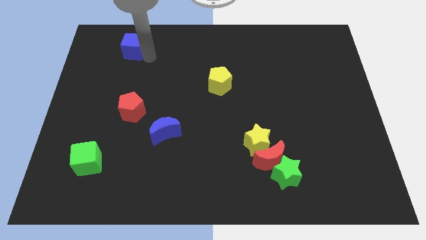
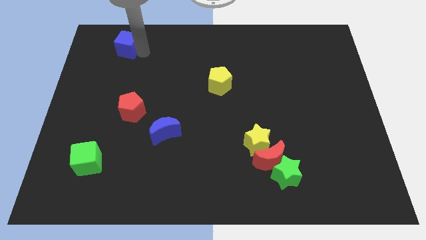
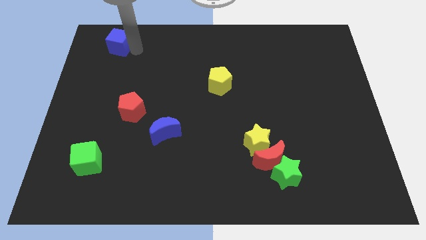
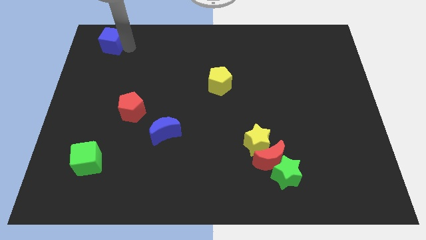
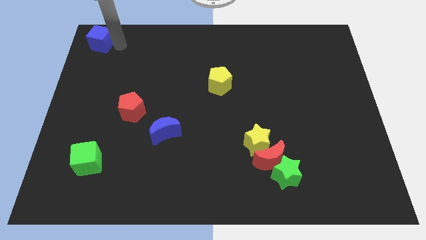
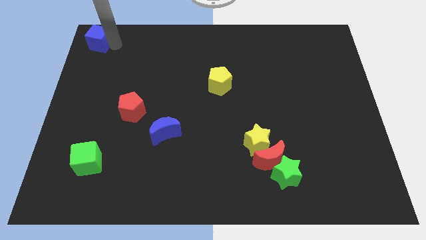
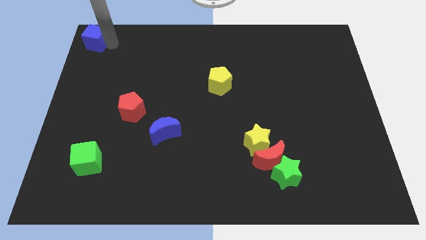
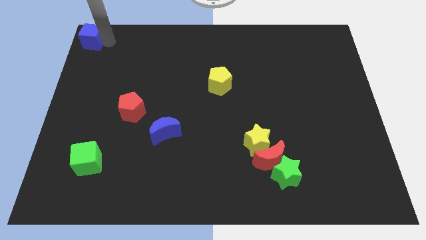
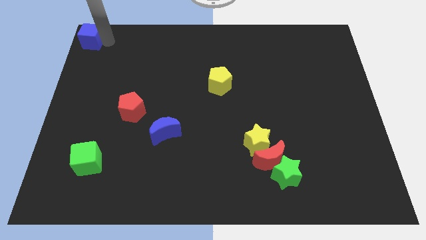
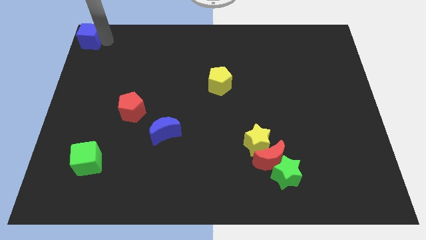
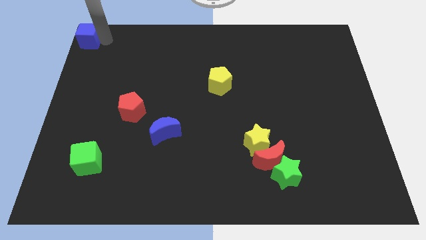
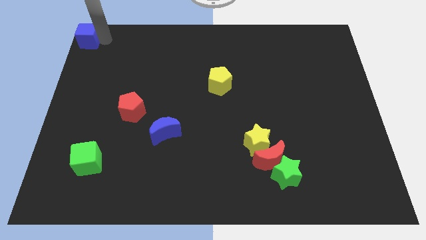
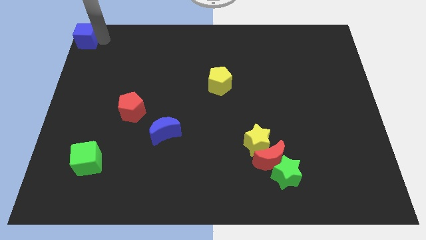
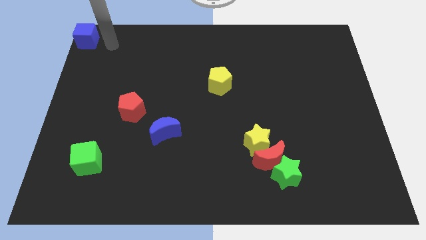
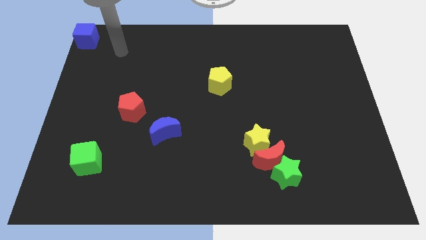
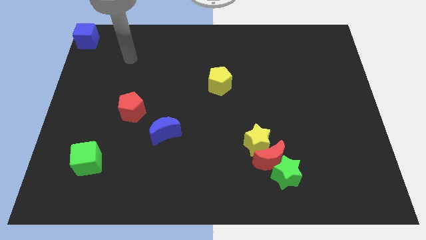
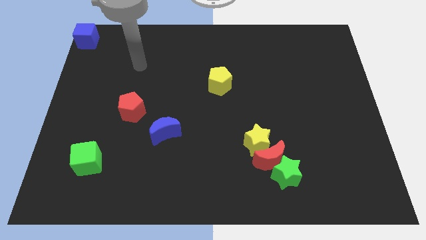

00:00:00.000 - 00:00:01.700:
drag the blue cube to the top left side

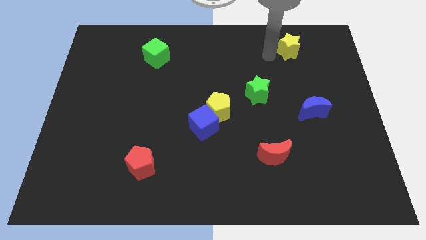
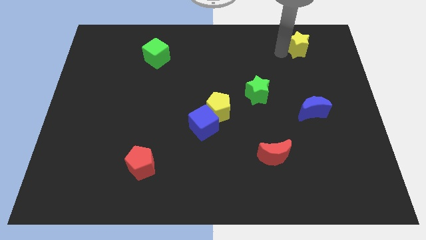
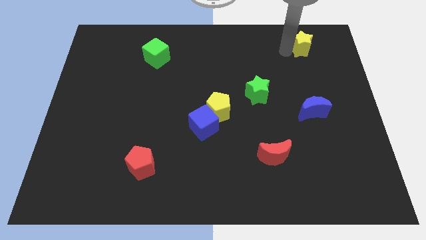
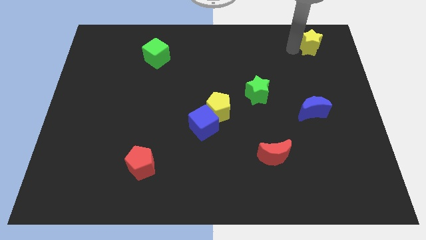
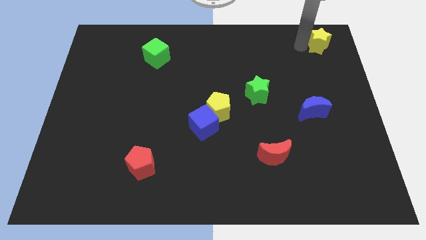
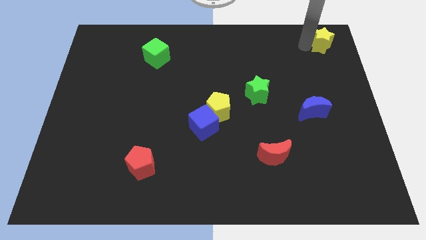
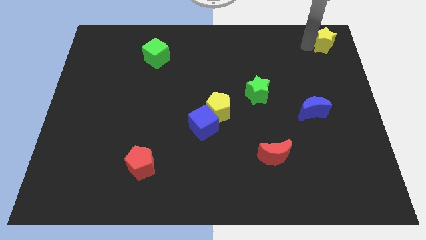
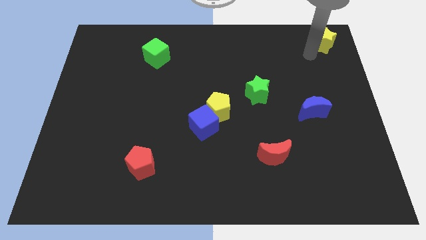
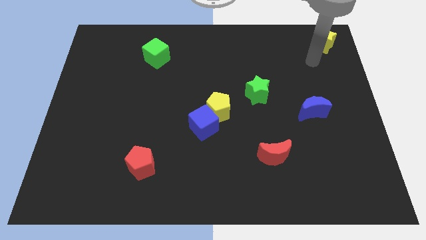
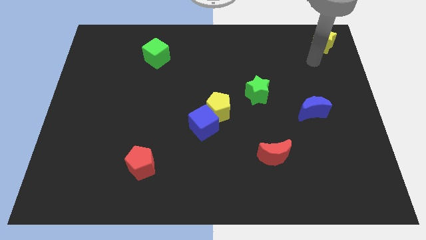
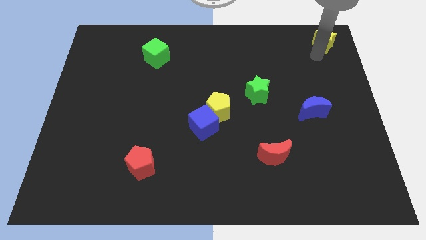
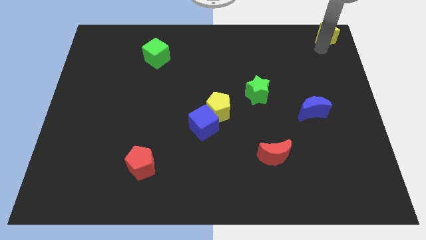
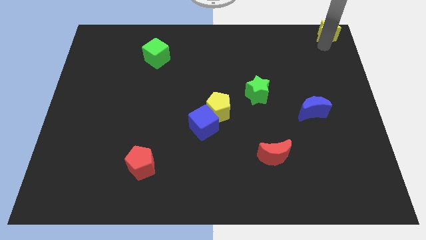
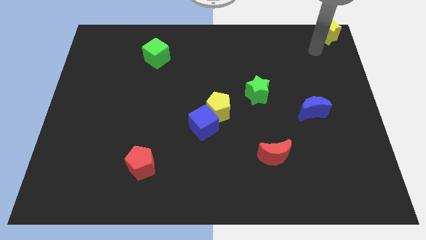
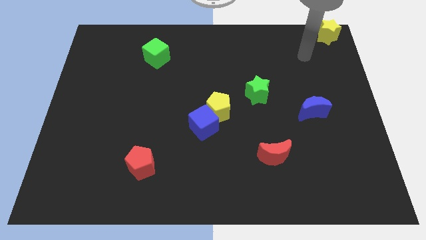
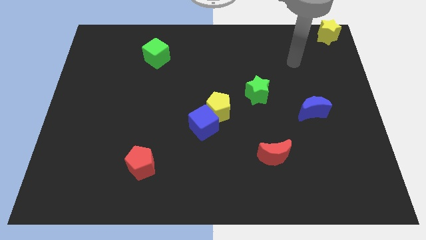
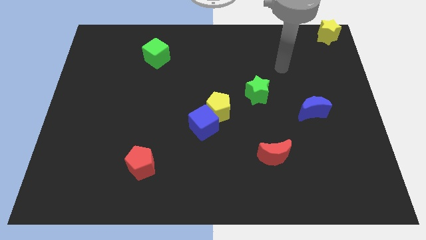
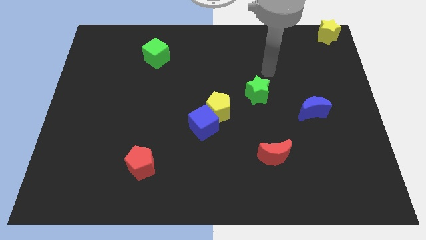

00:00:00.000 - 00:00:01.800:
place the yellow star towards the top right corner of the board

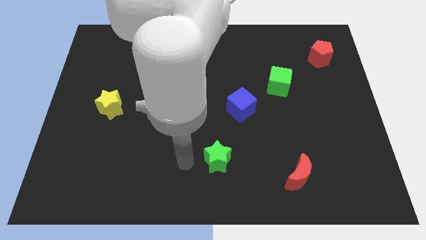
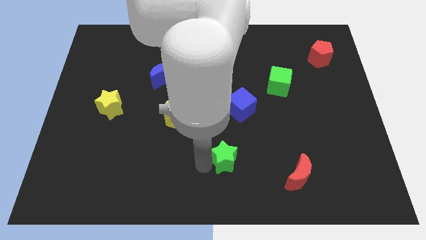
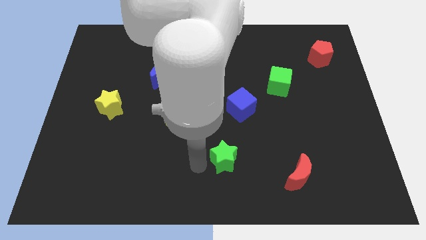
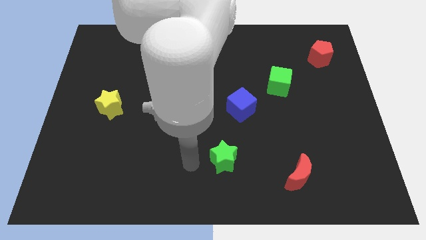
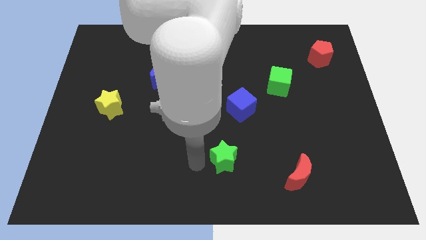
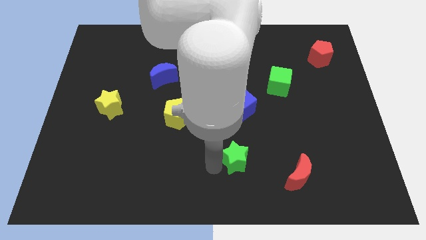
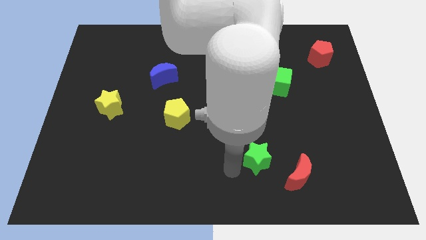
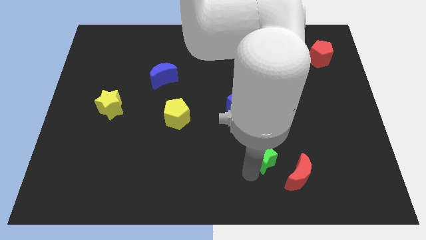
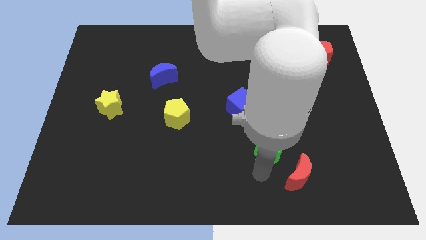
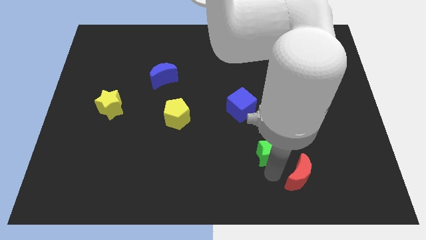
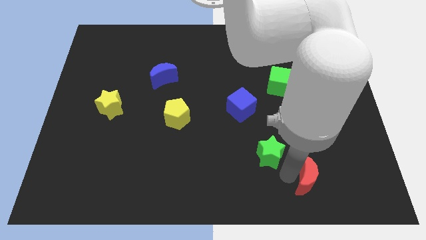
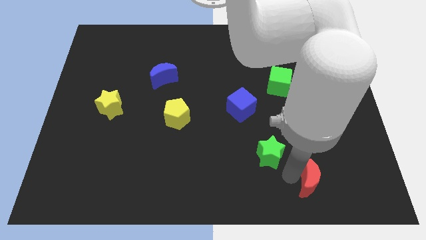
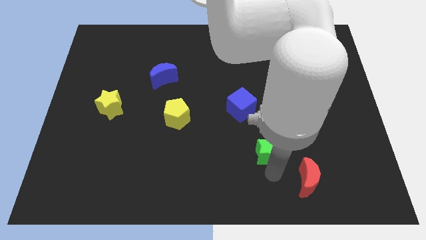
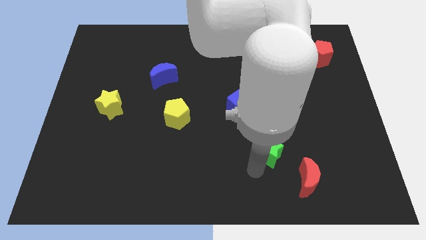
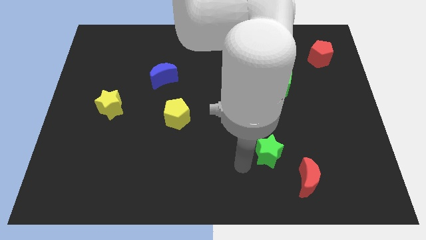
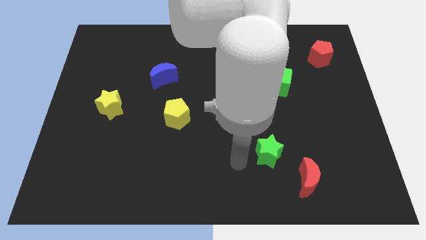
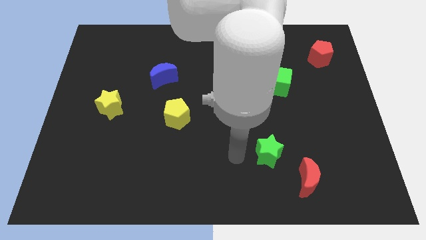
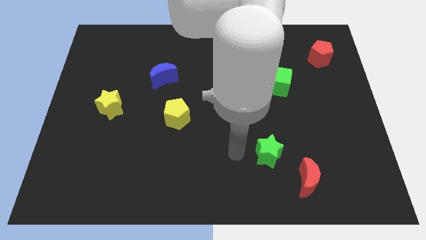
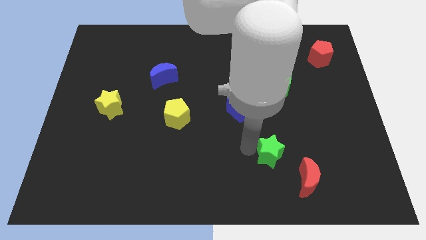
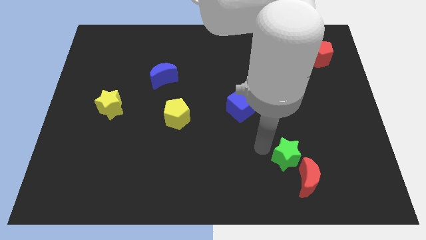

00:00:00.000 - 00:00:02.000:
place the green star diagonally in between the blue cube and red moon

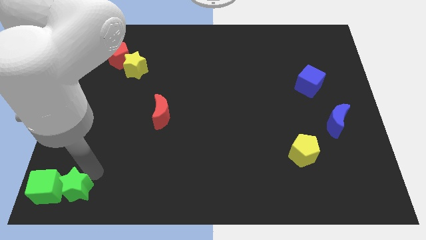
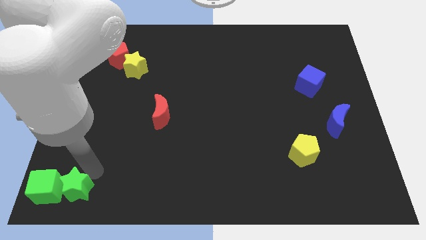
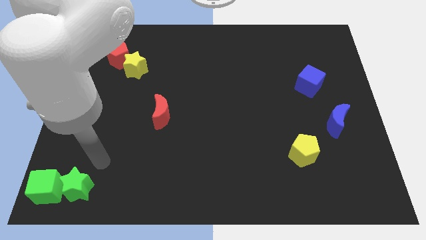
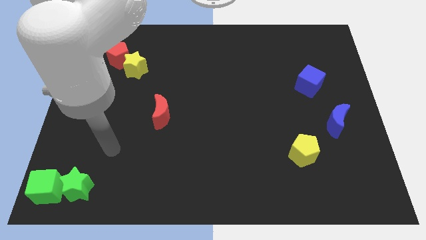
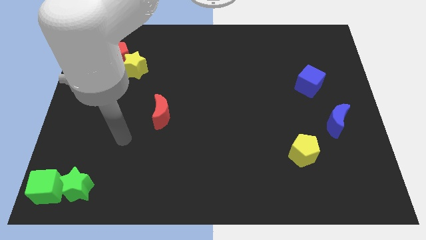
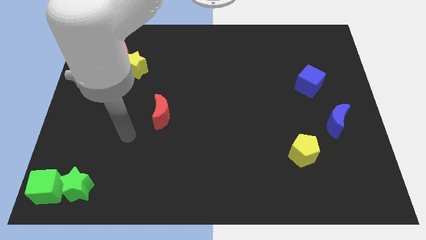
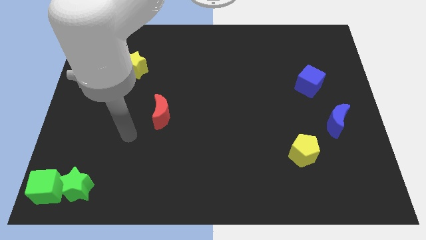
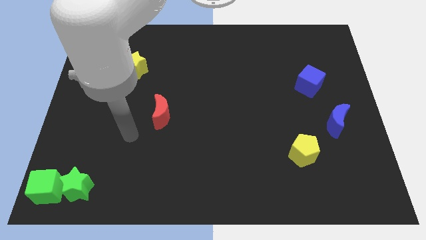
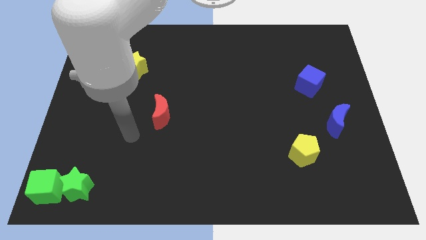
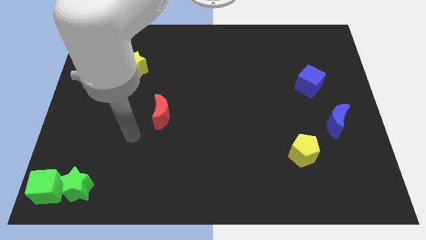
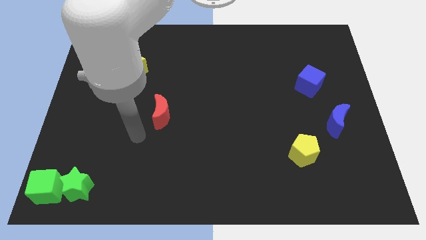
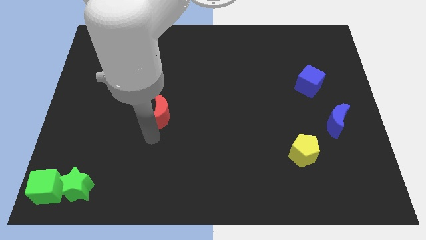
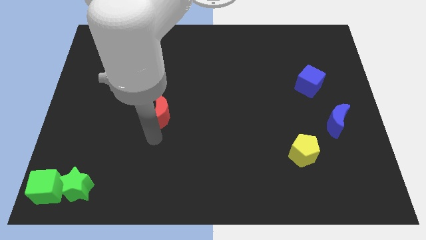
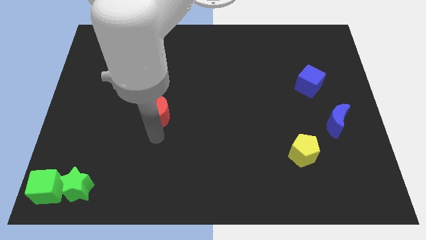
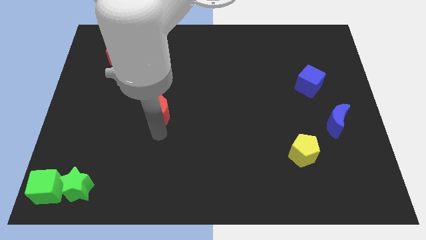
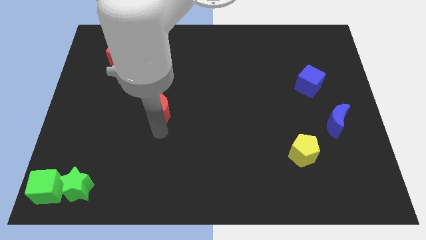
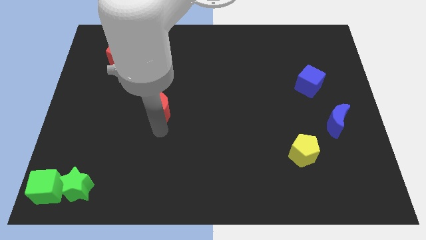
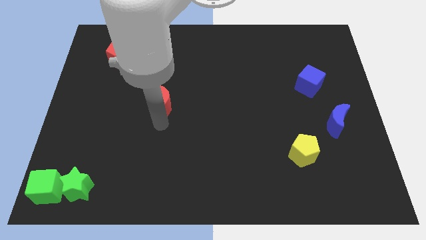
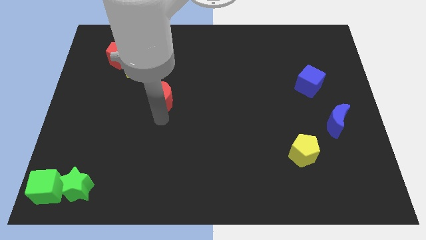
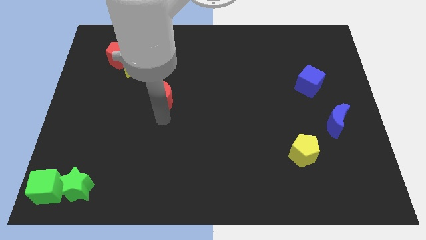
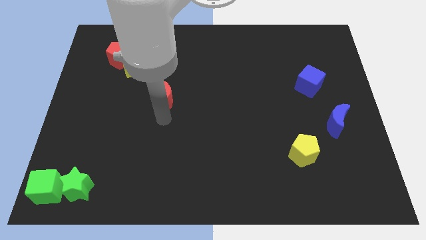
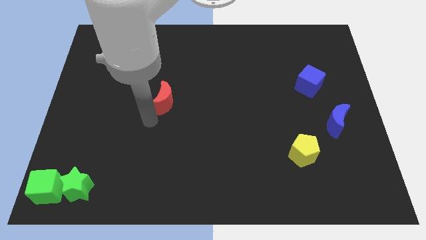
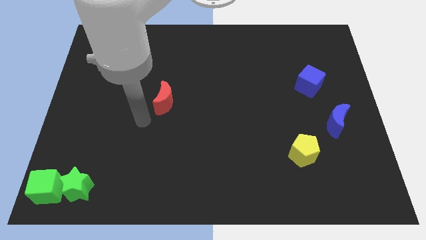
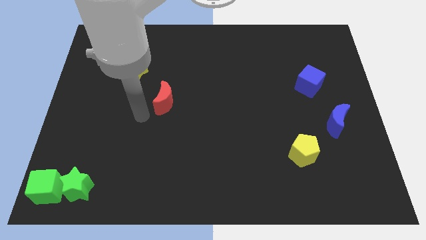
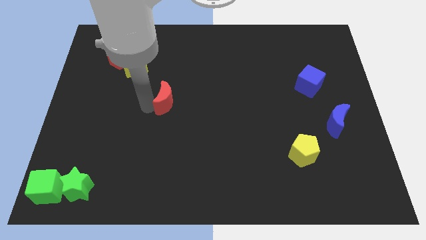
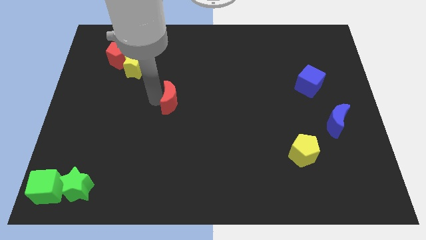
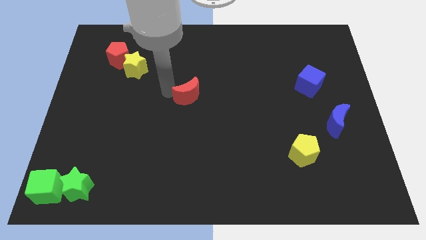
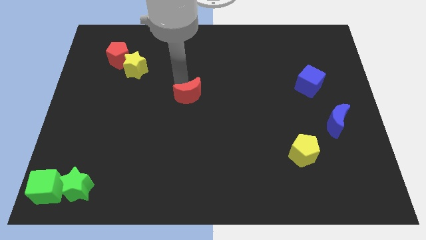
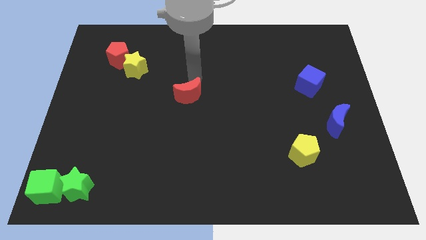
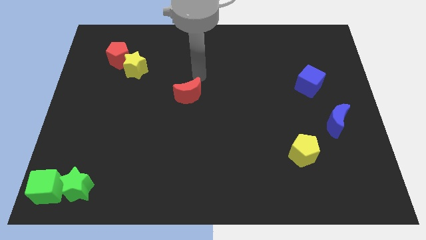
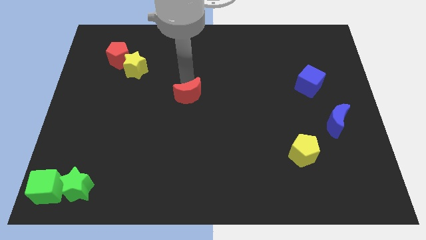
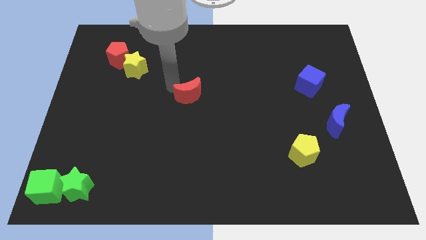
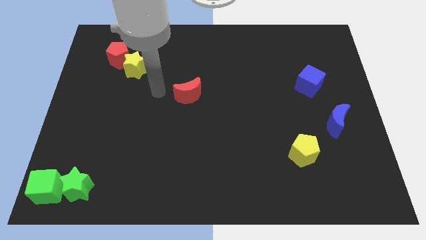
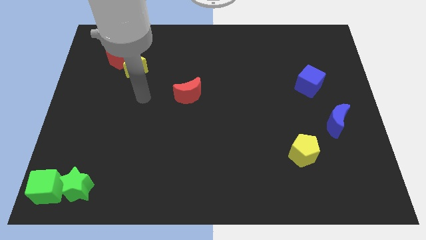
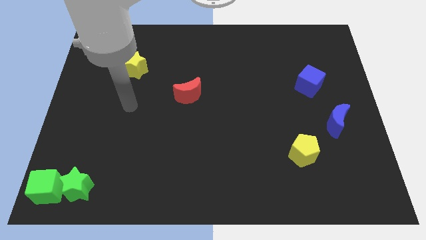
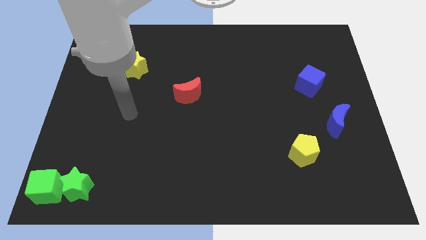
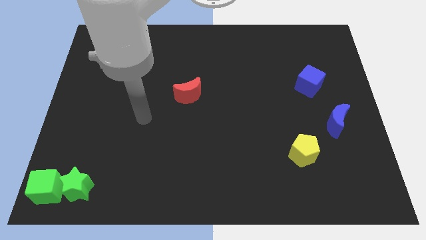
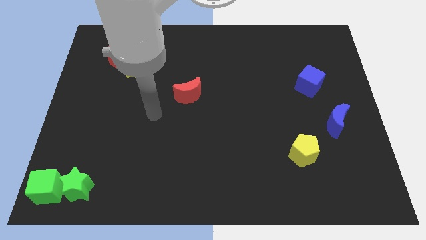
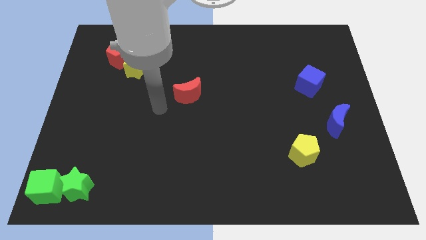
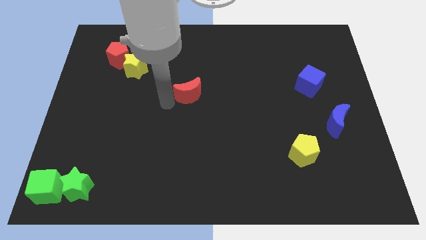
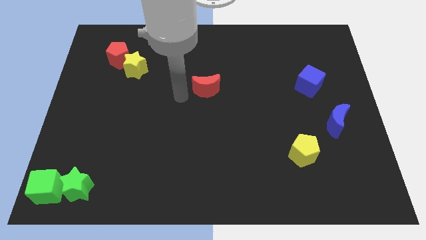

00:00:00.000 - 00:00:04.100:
move the red crescent to the center of the board
